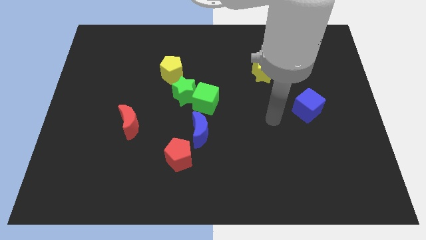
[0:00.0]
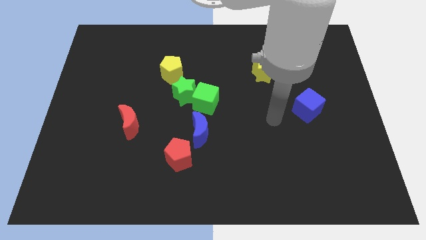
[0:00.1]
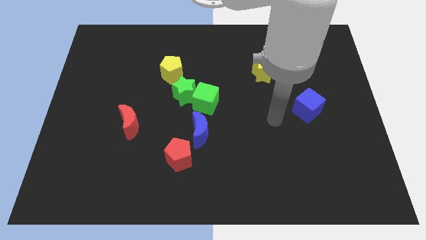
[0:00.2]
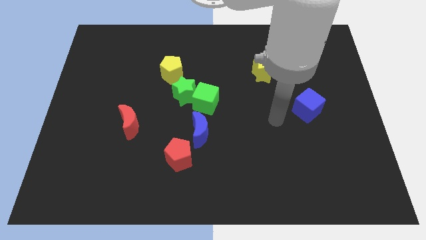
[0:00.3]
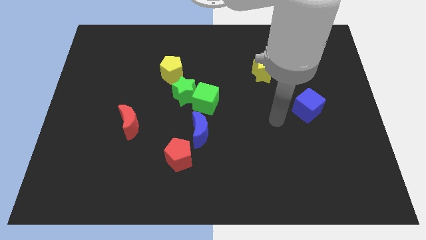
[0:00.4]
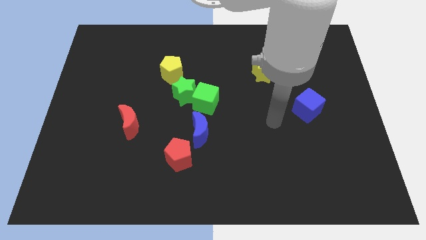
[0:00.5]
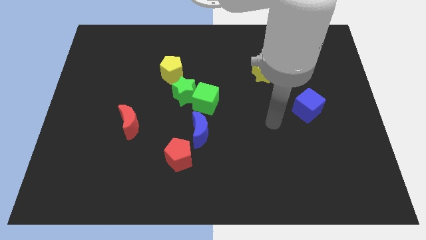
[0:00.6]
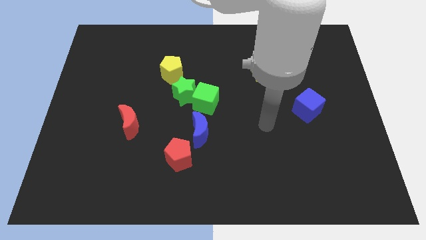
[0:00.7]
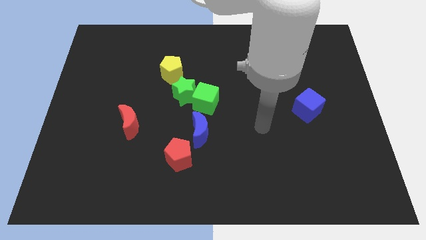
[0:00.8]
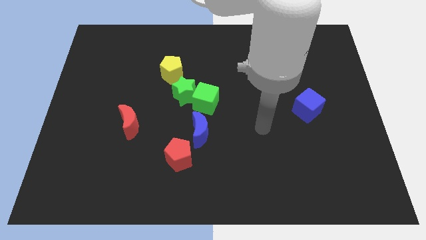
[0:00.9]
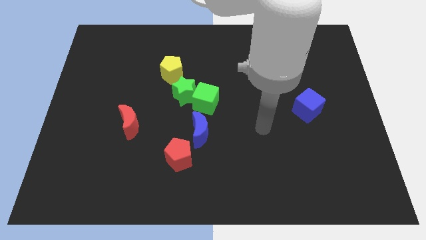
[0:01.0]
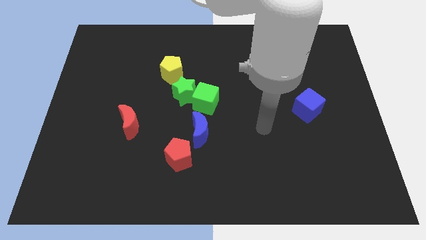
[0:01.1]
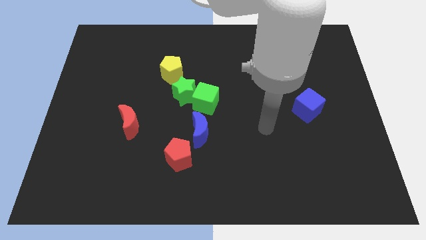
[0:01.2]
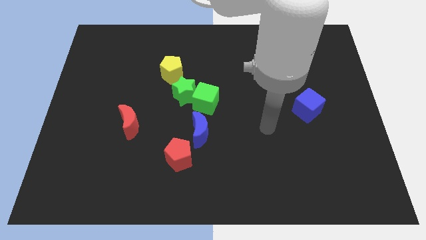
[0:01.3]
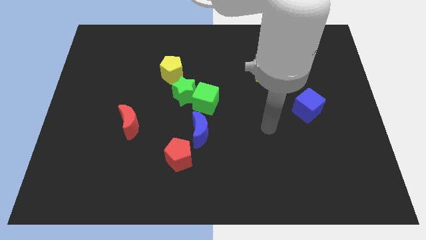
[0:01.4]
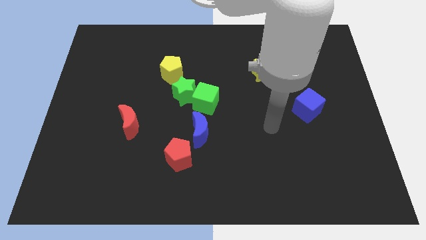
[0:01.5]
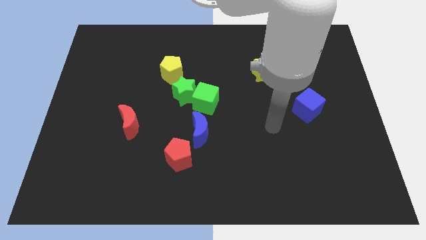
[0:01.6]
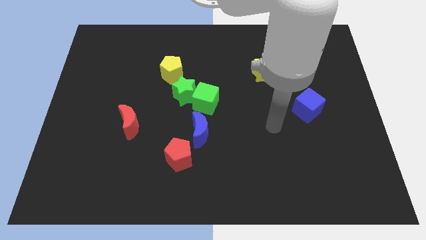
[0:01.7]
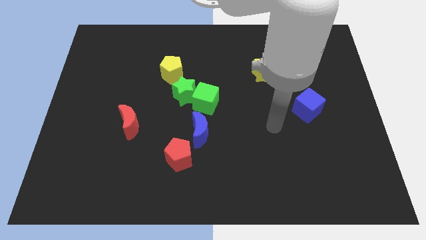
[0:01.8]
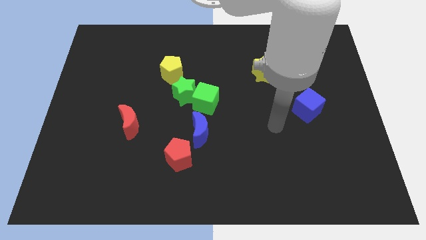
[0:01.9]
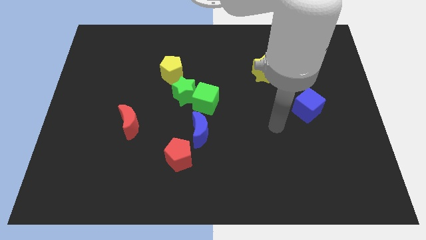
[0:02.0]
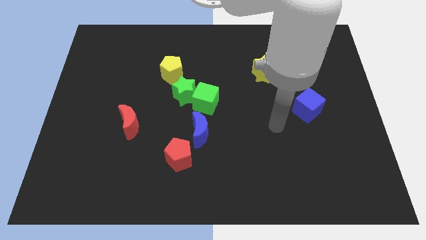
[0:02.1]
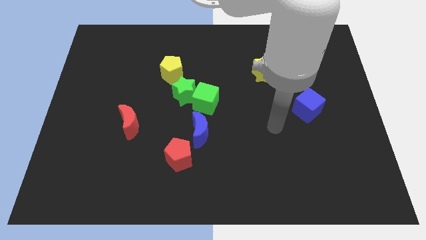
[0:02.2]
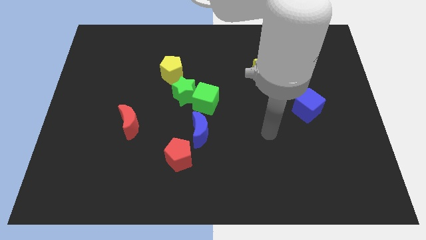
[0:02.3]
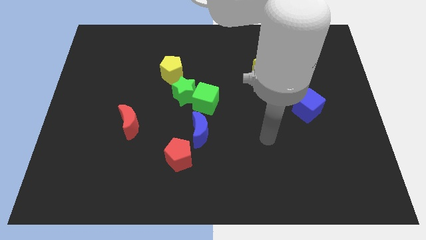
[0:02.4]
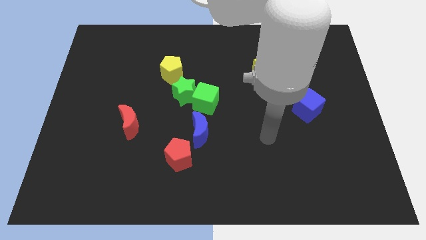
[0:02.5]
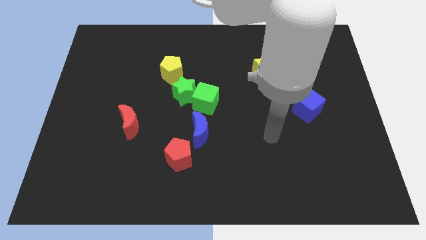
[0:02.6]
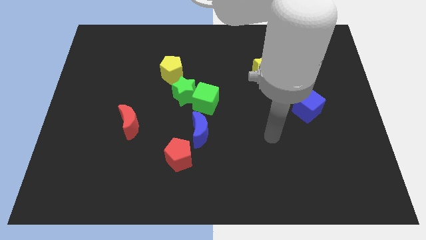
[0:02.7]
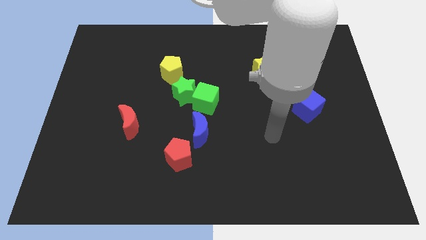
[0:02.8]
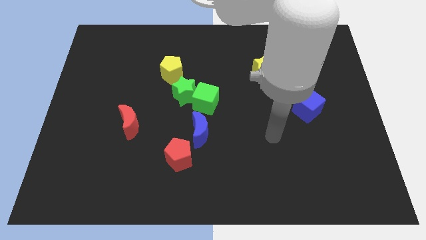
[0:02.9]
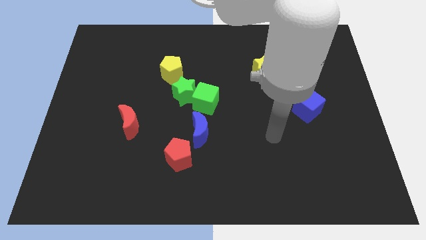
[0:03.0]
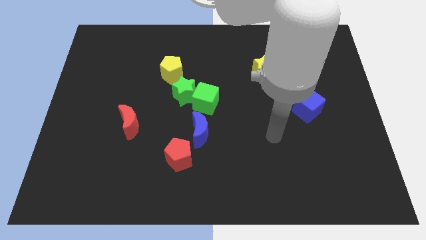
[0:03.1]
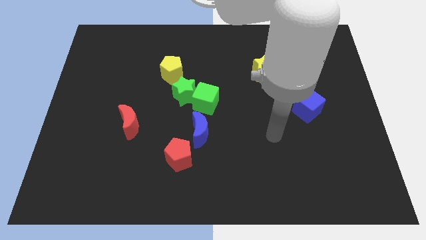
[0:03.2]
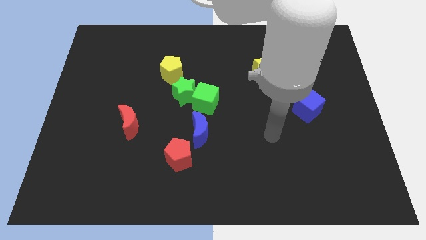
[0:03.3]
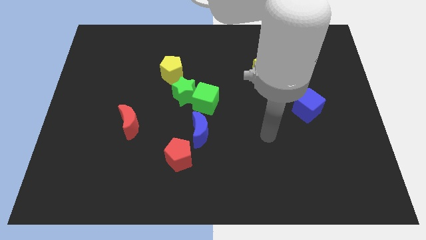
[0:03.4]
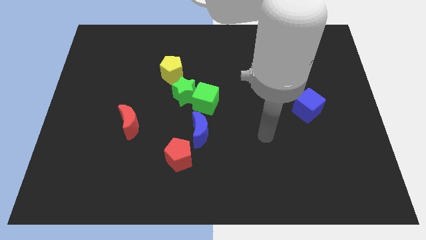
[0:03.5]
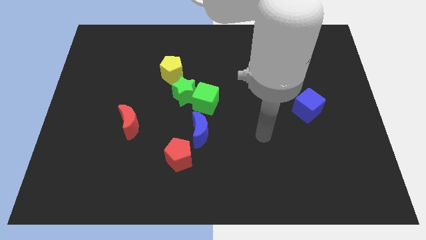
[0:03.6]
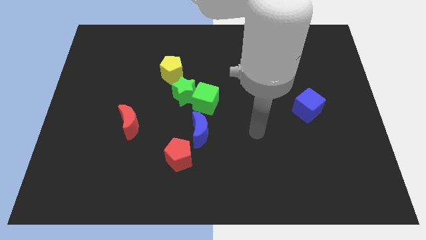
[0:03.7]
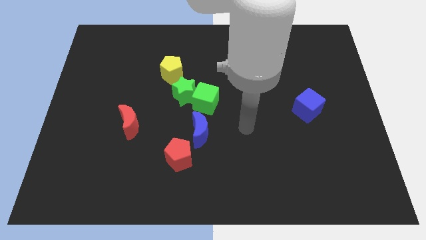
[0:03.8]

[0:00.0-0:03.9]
move your arm away from the blue cube

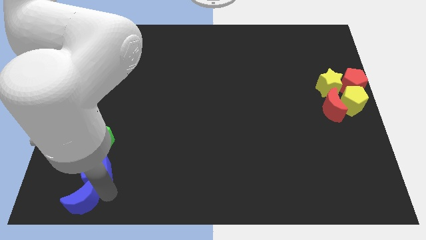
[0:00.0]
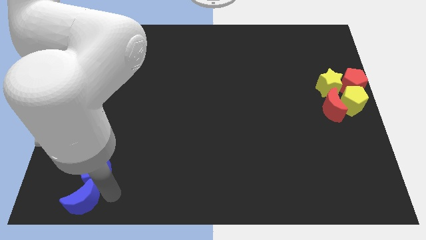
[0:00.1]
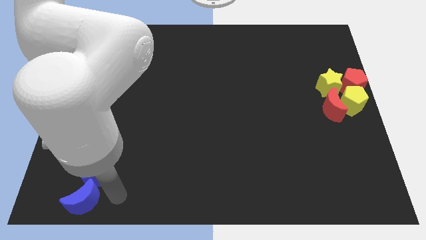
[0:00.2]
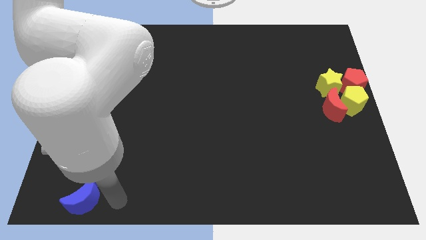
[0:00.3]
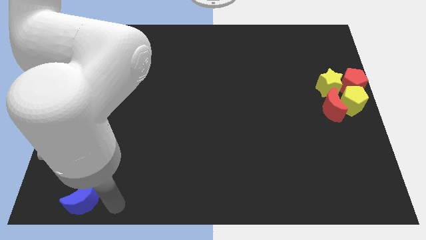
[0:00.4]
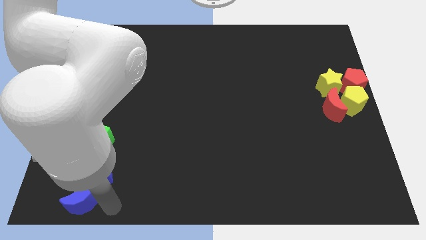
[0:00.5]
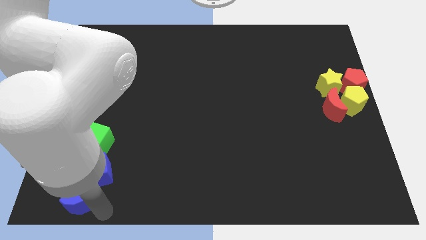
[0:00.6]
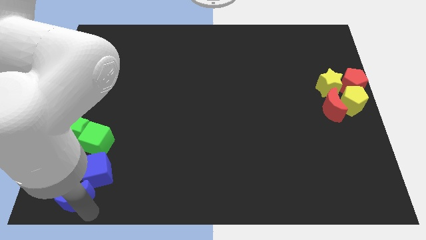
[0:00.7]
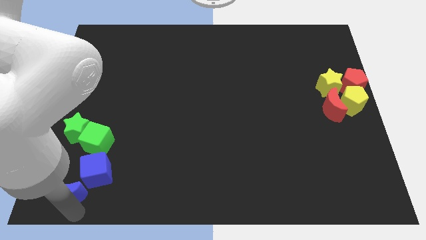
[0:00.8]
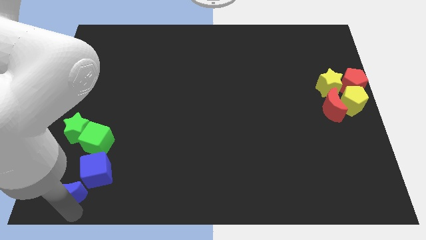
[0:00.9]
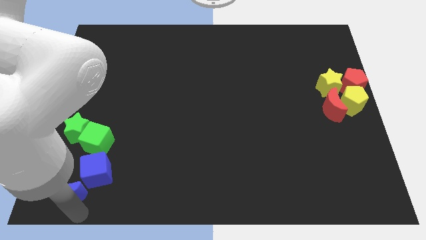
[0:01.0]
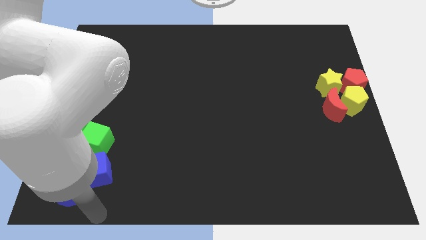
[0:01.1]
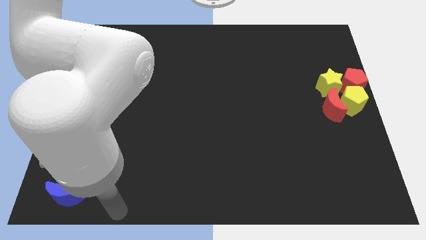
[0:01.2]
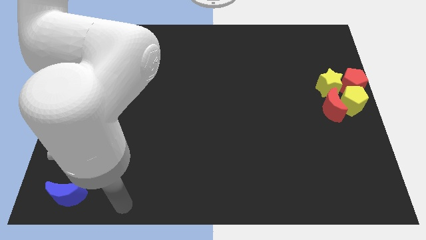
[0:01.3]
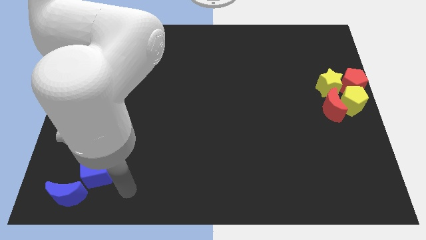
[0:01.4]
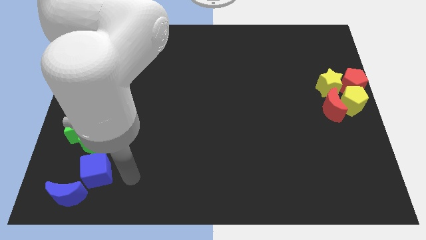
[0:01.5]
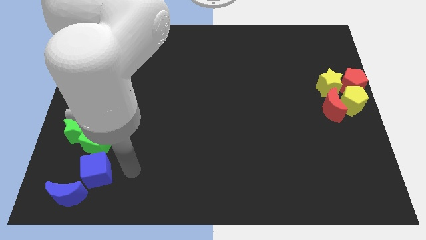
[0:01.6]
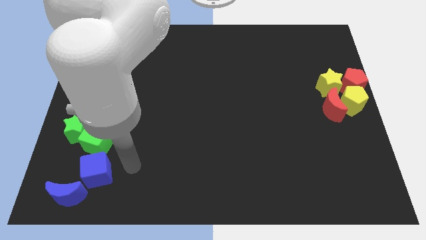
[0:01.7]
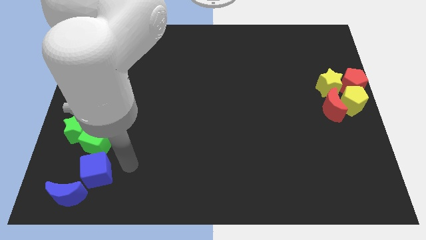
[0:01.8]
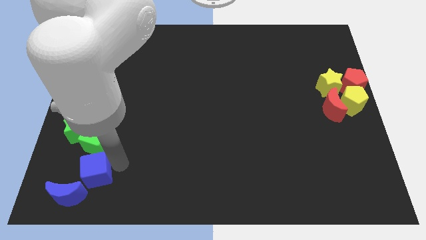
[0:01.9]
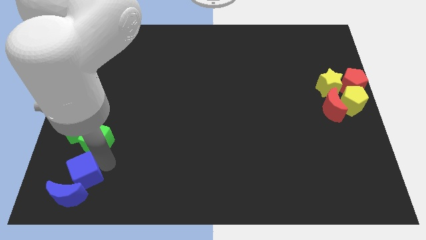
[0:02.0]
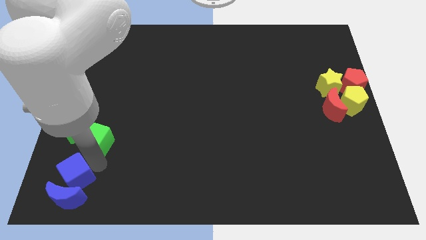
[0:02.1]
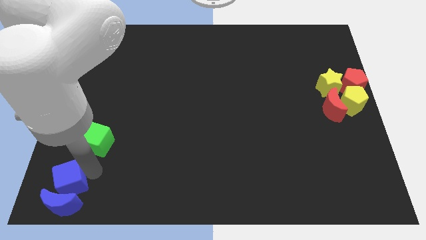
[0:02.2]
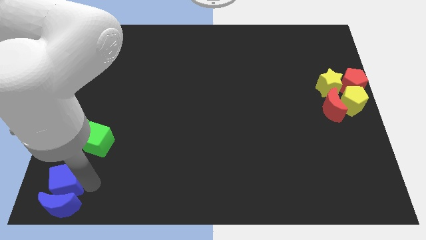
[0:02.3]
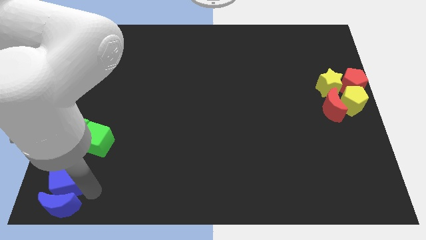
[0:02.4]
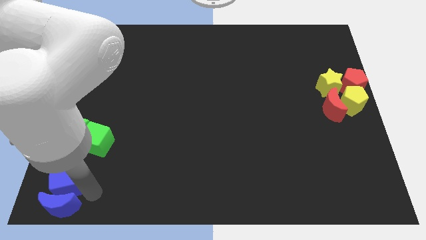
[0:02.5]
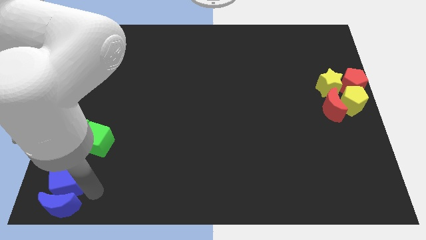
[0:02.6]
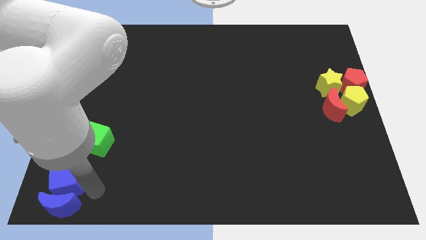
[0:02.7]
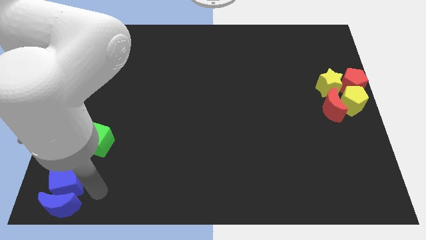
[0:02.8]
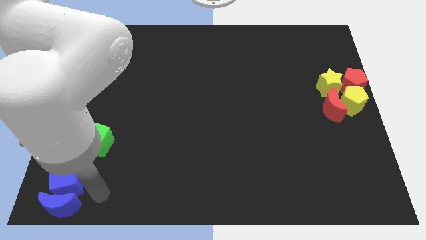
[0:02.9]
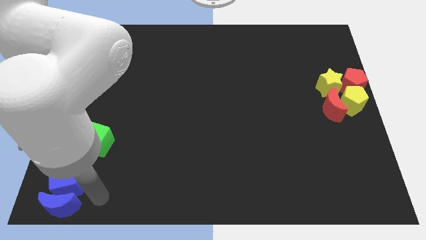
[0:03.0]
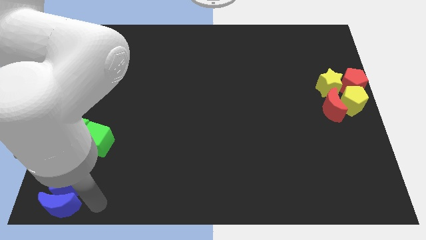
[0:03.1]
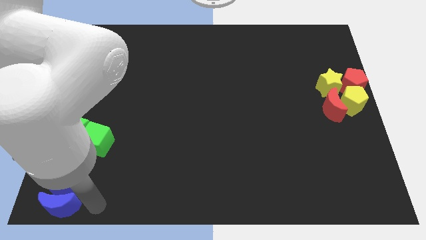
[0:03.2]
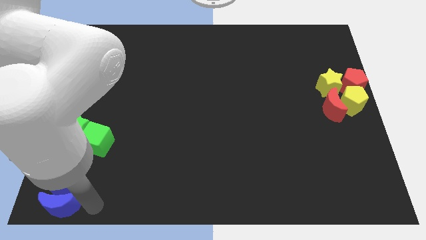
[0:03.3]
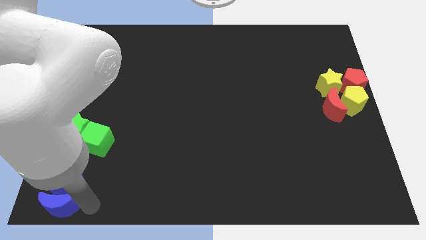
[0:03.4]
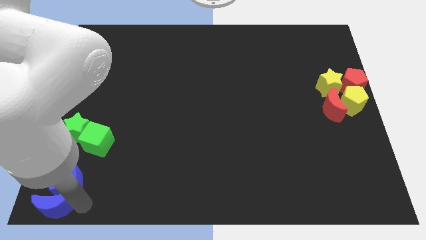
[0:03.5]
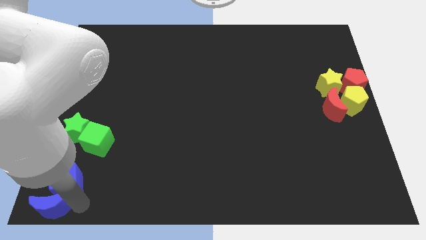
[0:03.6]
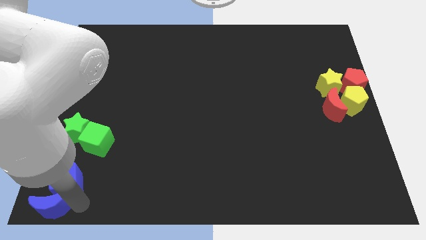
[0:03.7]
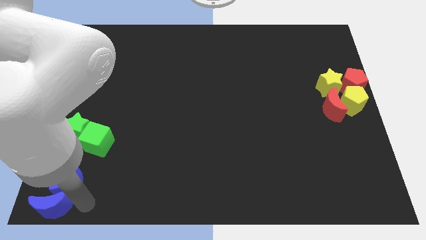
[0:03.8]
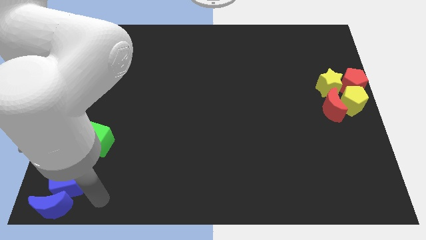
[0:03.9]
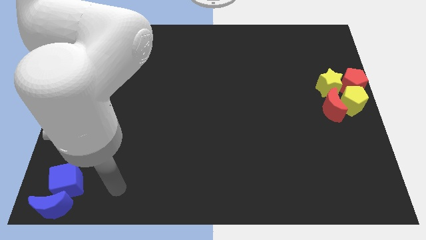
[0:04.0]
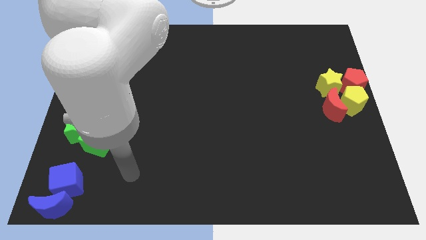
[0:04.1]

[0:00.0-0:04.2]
push blue blocks towards bottom left corner
